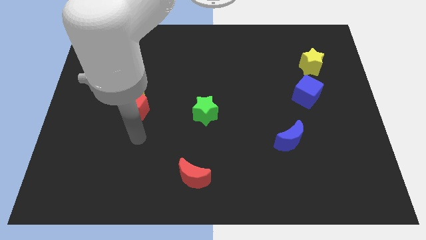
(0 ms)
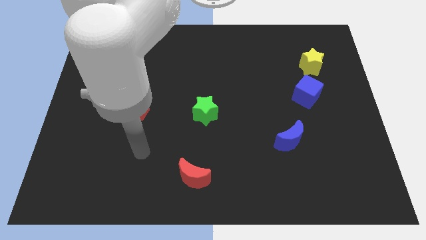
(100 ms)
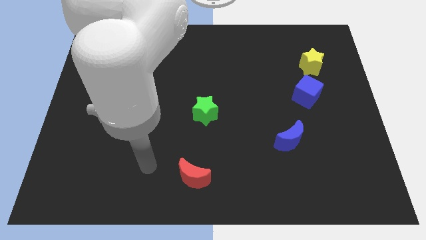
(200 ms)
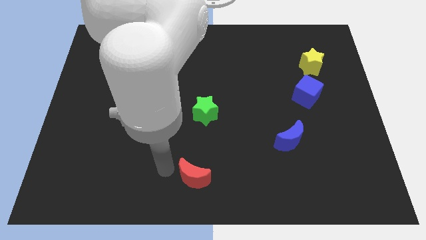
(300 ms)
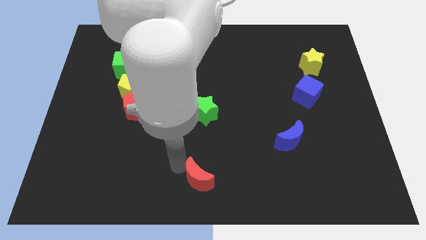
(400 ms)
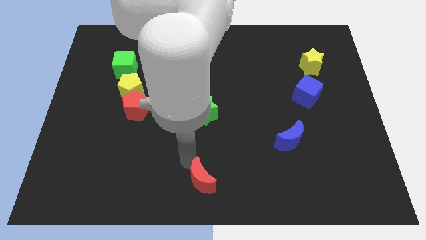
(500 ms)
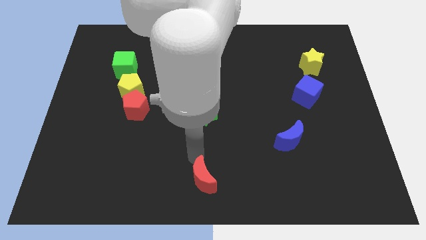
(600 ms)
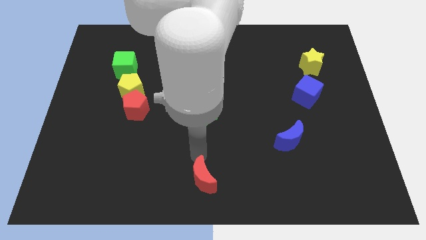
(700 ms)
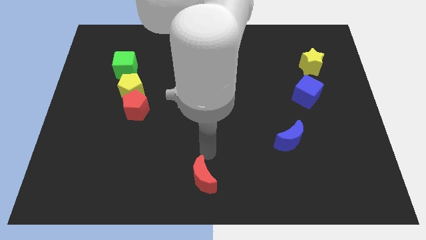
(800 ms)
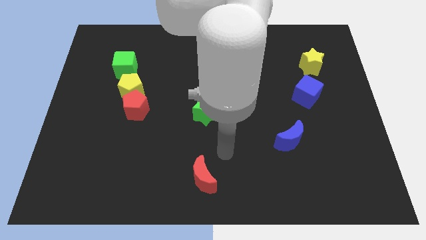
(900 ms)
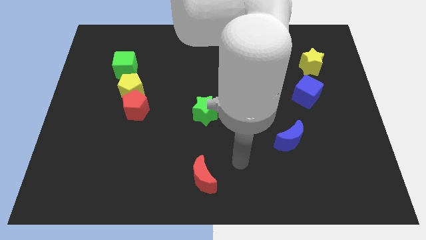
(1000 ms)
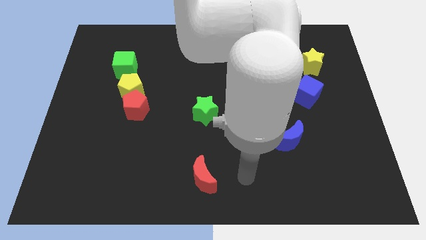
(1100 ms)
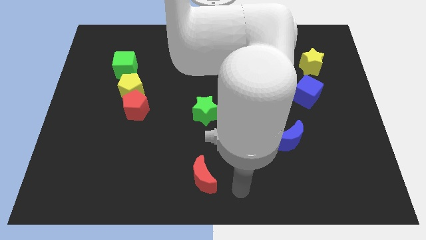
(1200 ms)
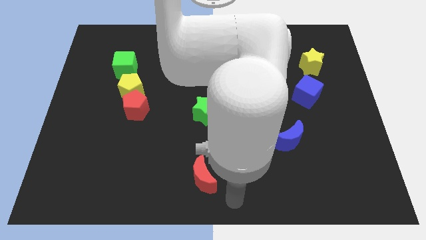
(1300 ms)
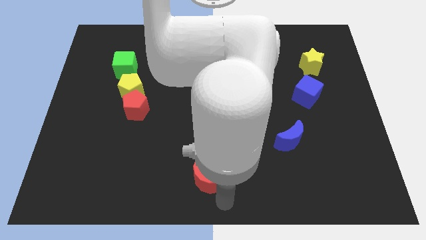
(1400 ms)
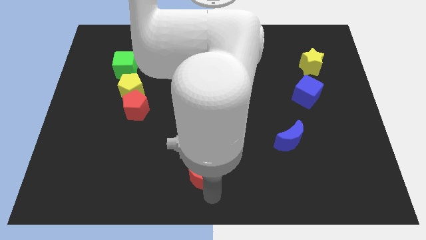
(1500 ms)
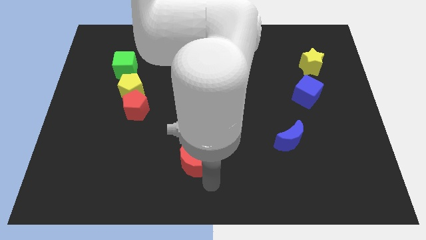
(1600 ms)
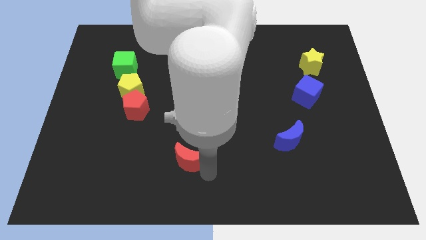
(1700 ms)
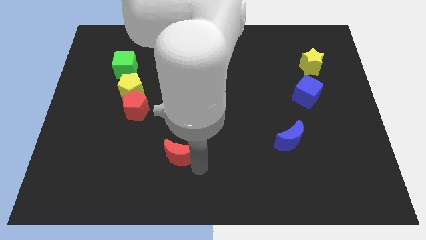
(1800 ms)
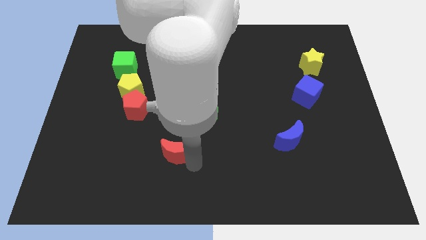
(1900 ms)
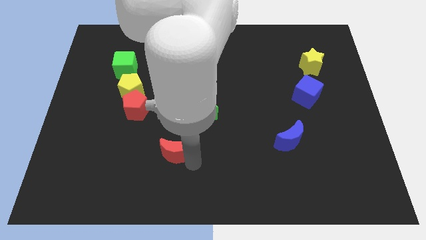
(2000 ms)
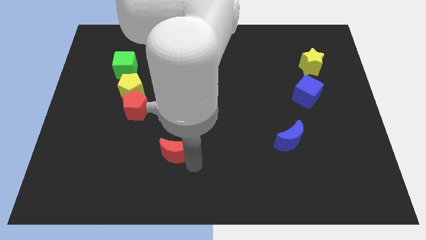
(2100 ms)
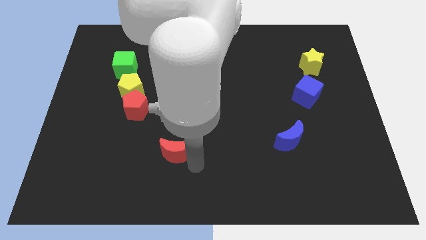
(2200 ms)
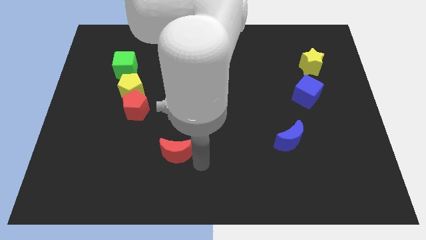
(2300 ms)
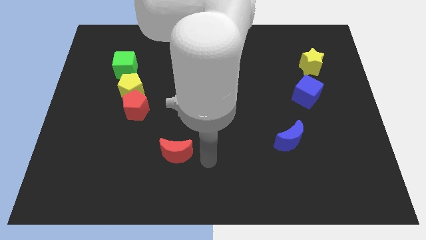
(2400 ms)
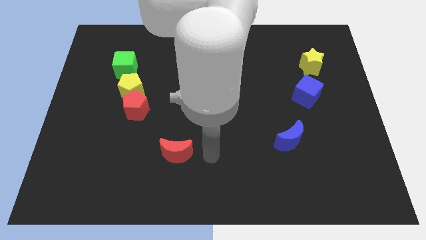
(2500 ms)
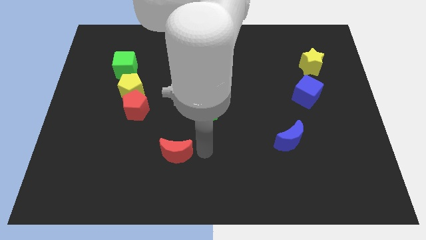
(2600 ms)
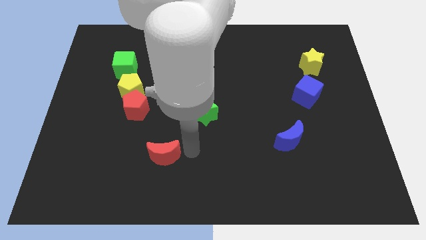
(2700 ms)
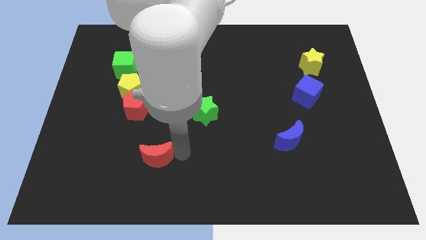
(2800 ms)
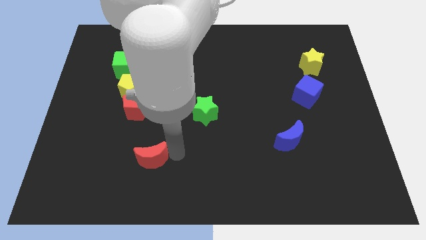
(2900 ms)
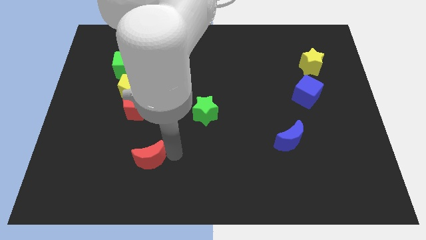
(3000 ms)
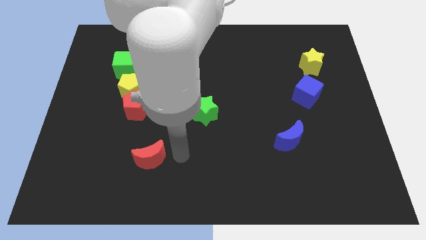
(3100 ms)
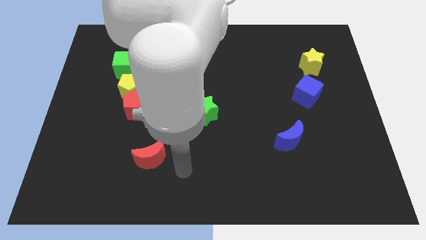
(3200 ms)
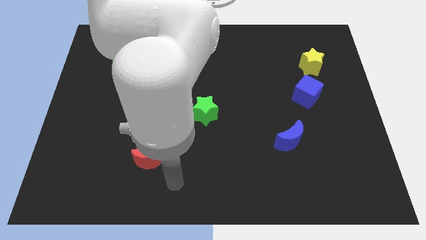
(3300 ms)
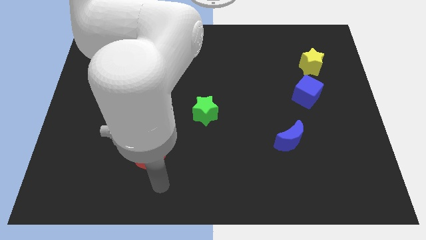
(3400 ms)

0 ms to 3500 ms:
push the red crescent below the red pentagon

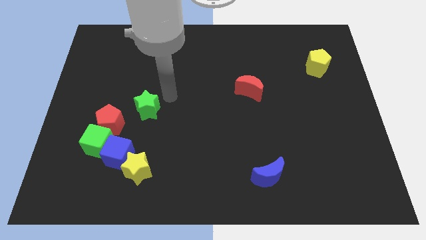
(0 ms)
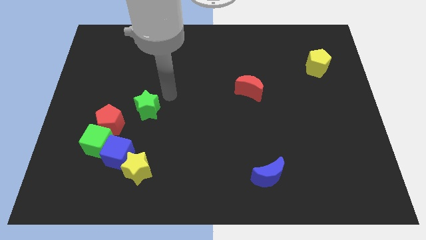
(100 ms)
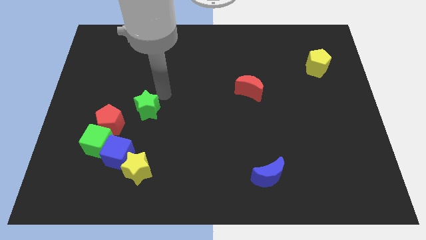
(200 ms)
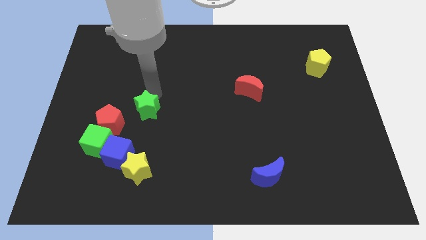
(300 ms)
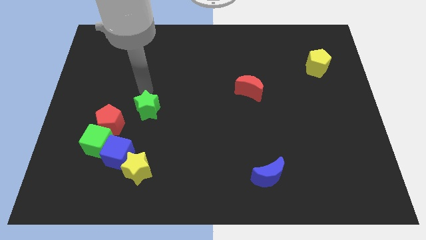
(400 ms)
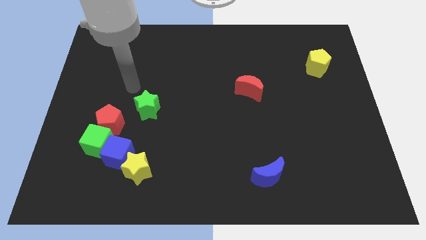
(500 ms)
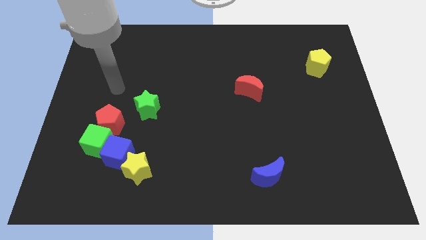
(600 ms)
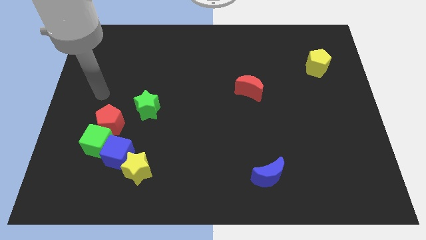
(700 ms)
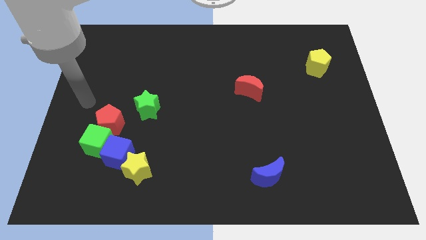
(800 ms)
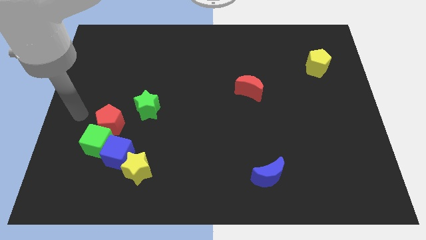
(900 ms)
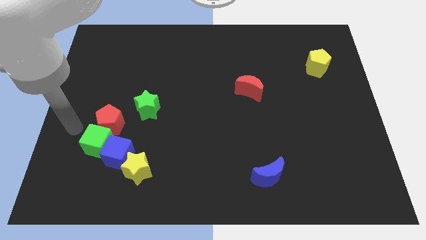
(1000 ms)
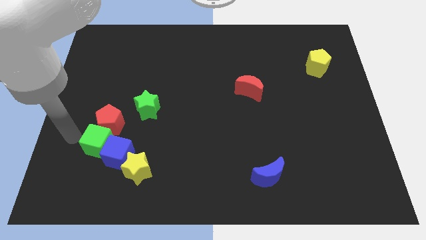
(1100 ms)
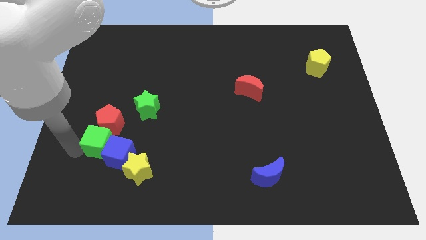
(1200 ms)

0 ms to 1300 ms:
point your arm at the left of the green cube

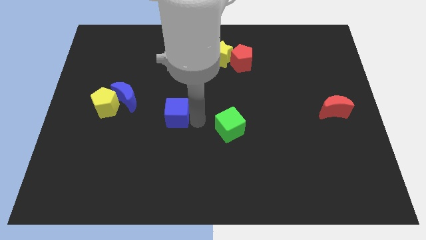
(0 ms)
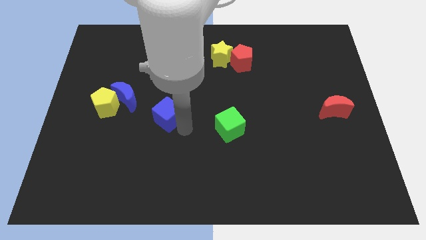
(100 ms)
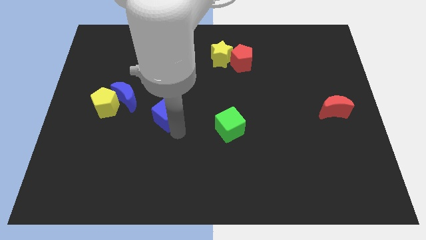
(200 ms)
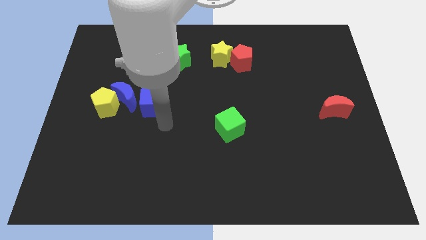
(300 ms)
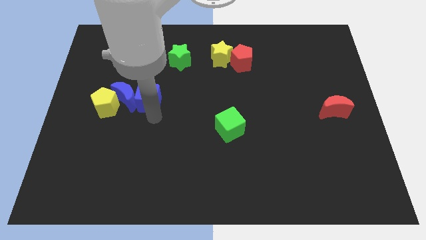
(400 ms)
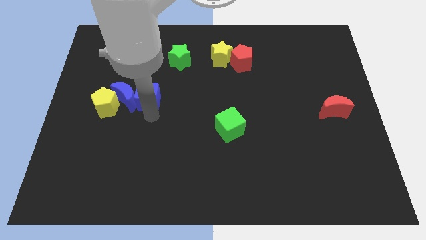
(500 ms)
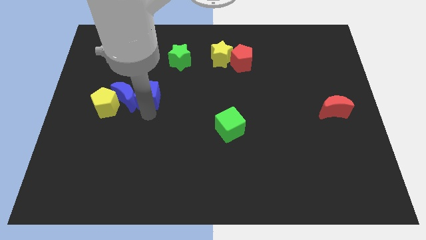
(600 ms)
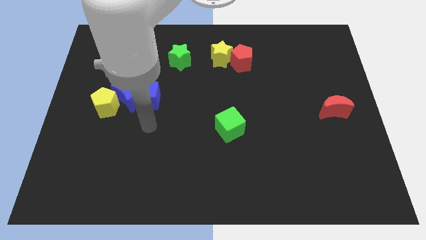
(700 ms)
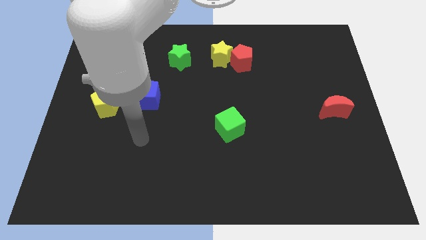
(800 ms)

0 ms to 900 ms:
make the blue cube to touch the blue crescent

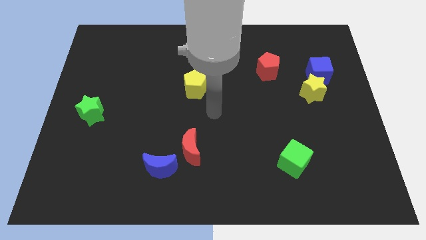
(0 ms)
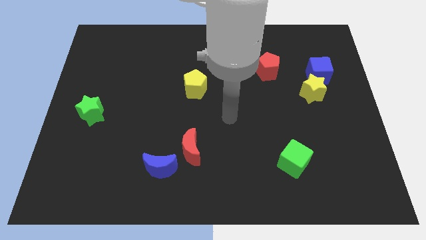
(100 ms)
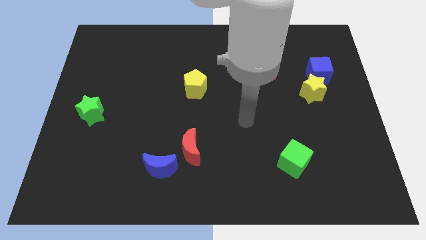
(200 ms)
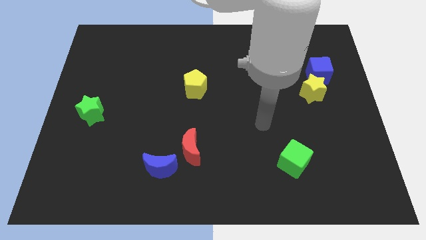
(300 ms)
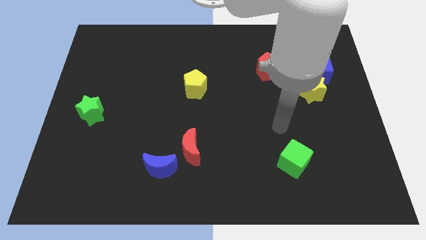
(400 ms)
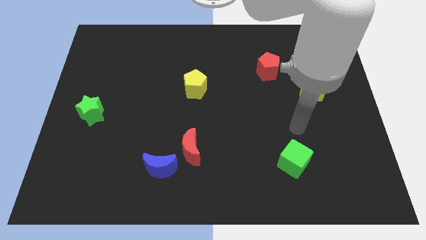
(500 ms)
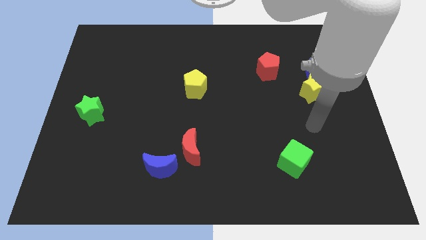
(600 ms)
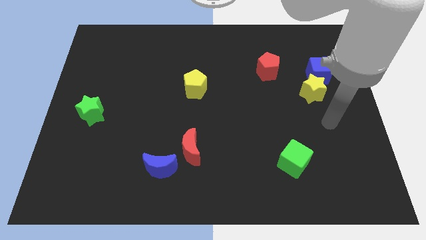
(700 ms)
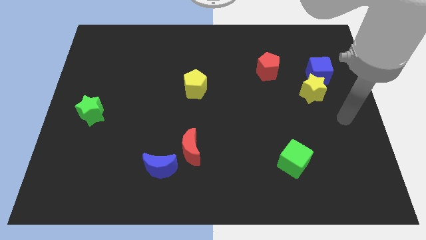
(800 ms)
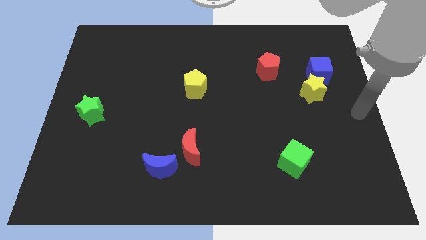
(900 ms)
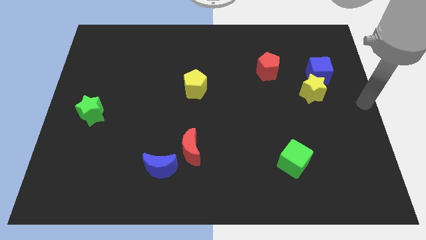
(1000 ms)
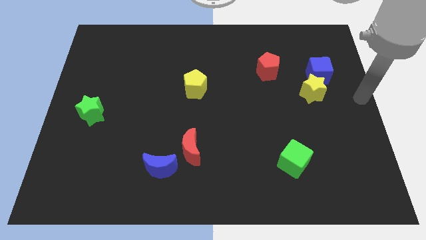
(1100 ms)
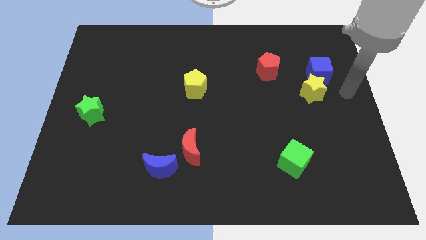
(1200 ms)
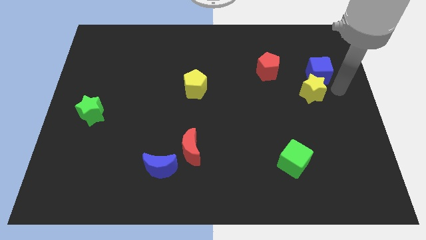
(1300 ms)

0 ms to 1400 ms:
move your arm to the right of yellow star

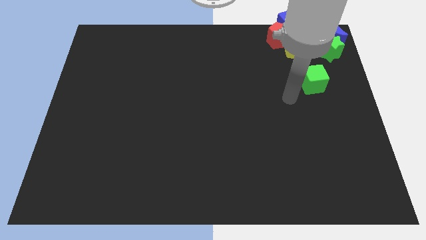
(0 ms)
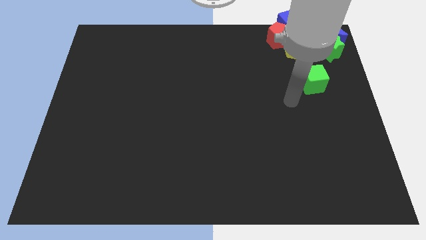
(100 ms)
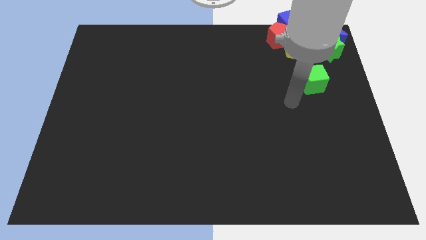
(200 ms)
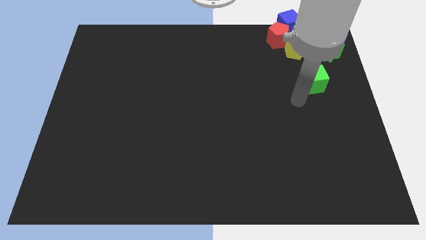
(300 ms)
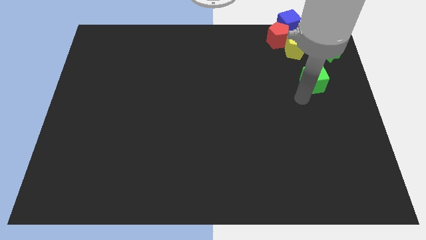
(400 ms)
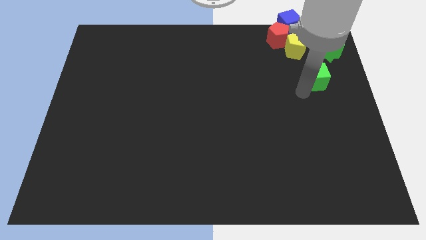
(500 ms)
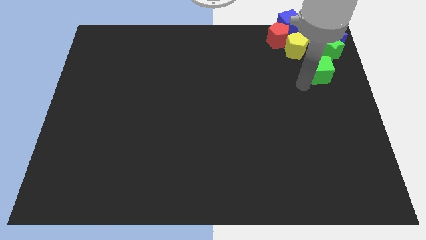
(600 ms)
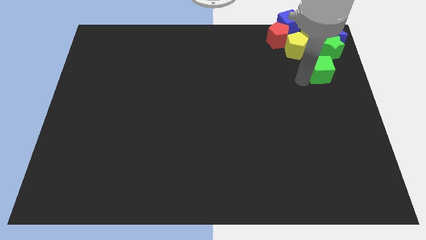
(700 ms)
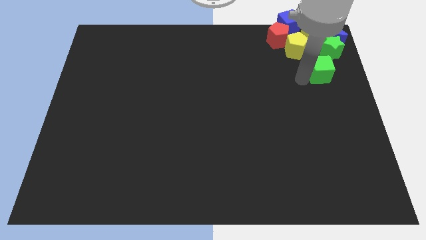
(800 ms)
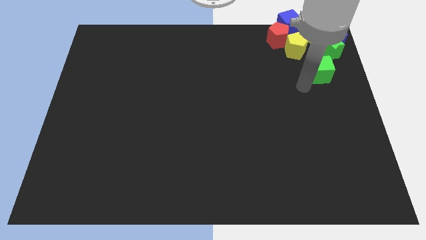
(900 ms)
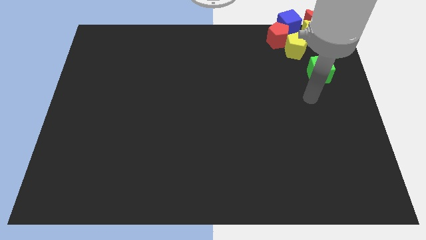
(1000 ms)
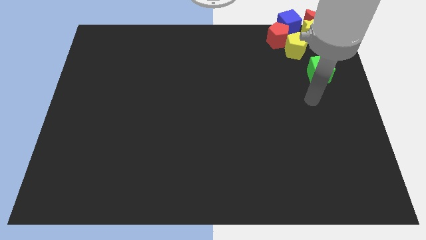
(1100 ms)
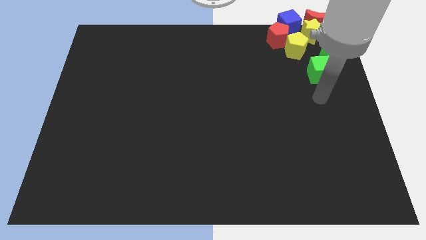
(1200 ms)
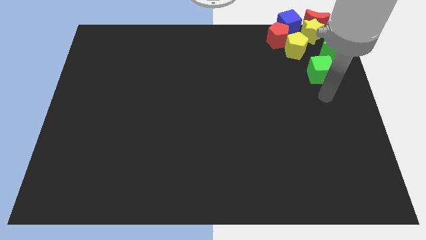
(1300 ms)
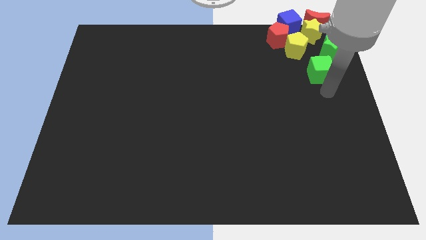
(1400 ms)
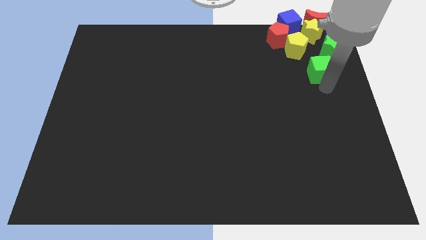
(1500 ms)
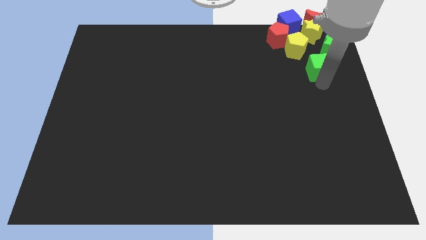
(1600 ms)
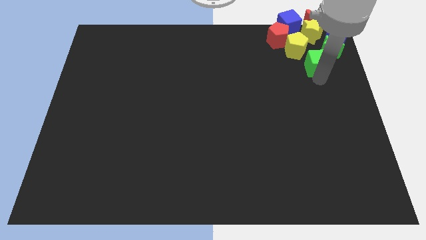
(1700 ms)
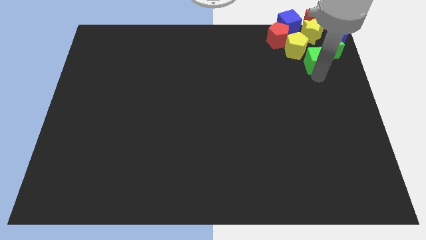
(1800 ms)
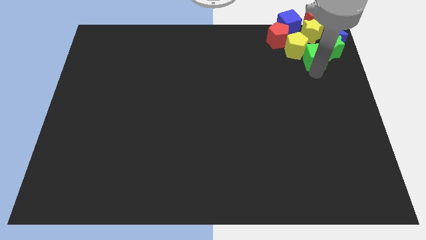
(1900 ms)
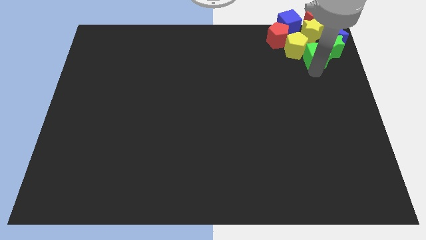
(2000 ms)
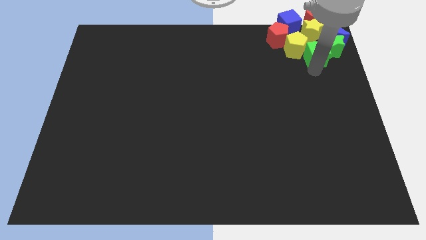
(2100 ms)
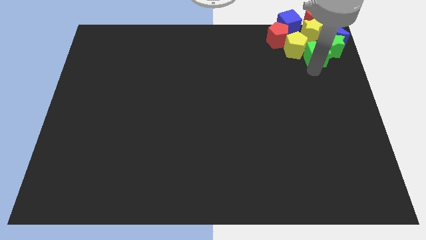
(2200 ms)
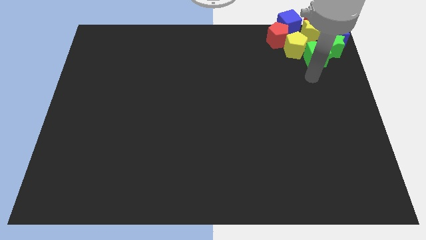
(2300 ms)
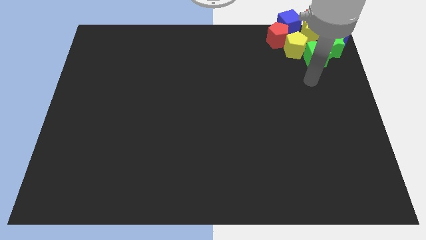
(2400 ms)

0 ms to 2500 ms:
put all the blocks on top right corner of the board
